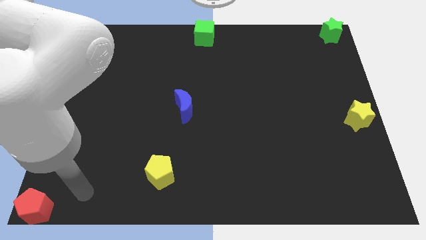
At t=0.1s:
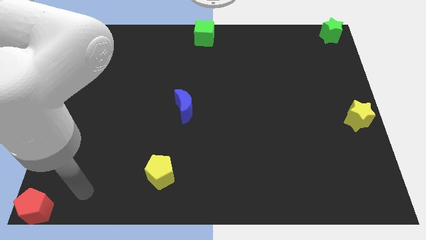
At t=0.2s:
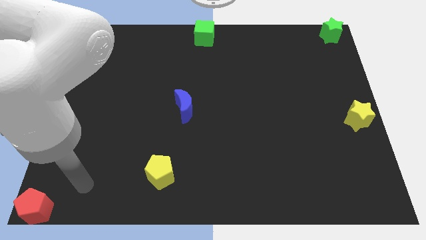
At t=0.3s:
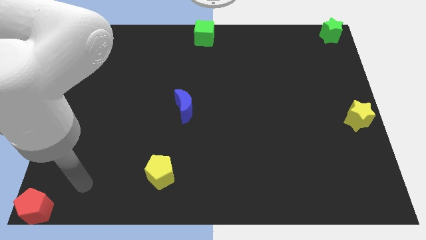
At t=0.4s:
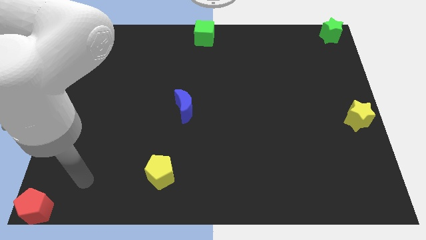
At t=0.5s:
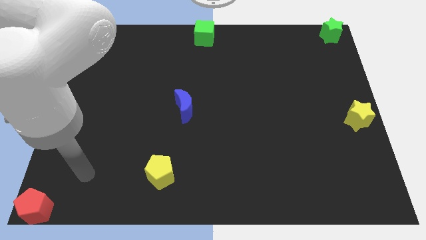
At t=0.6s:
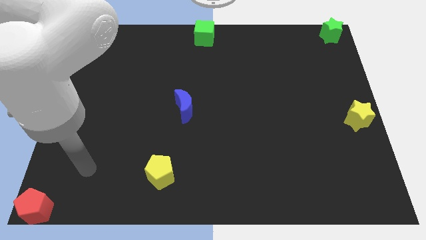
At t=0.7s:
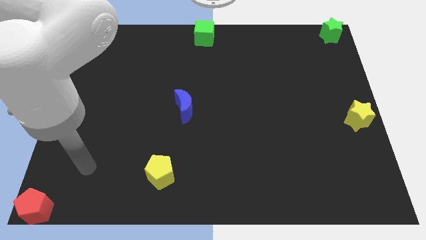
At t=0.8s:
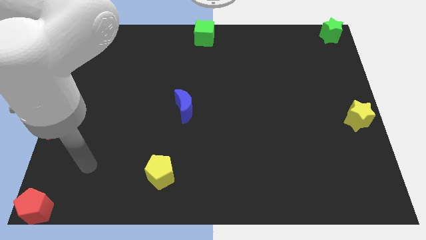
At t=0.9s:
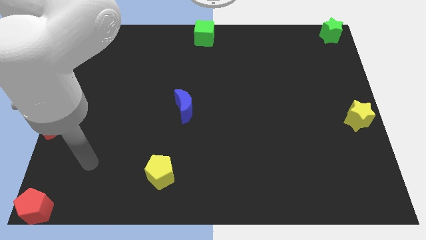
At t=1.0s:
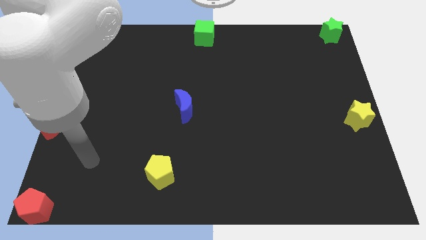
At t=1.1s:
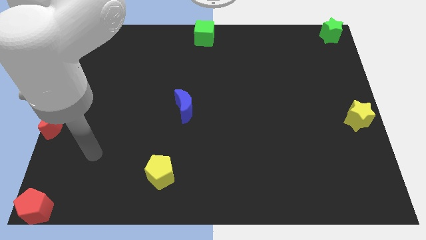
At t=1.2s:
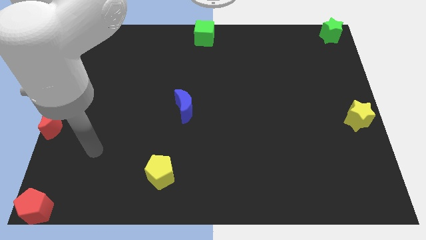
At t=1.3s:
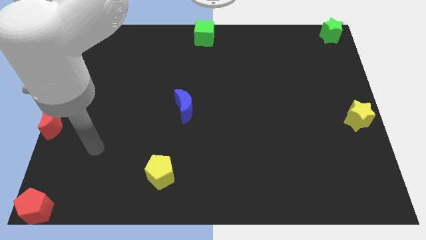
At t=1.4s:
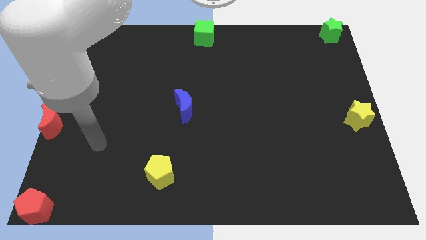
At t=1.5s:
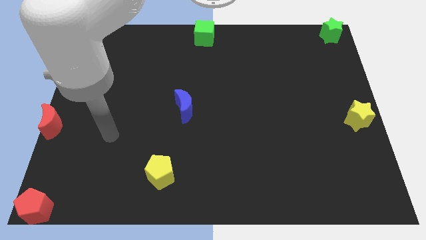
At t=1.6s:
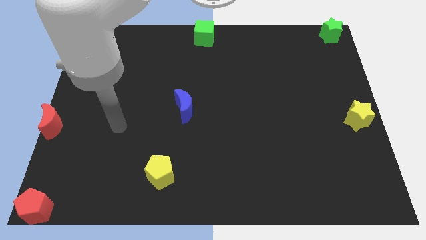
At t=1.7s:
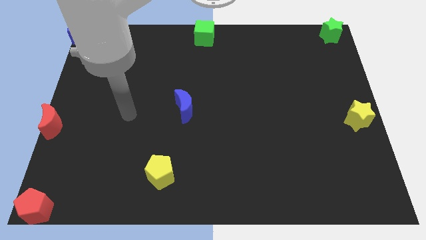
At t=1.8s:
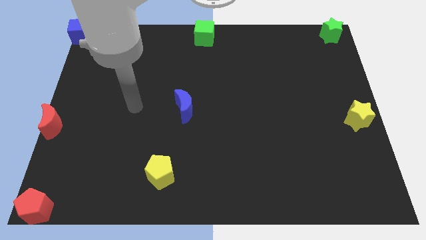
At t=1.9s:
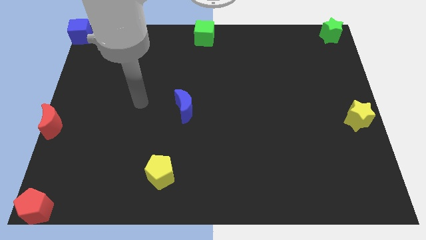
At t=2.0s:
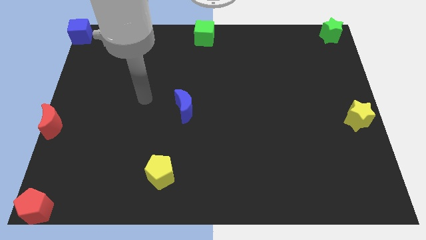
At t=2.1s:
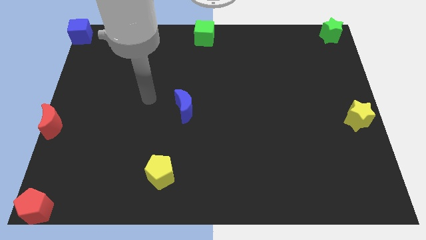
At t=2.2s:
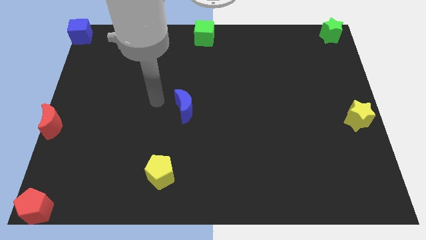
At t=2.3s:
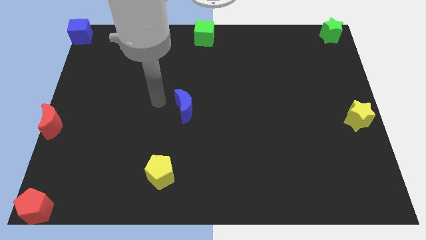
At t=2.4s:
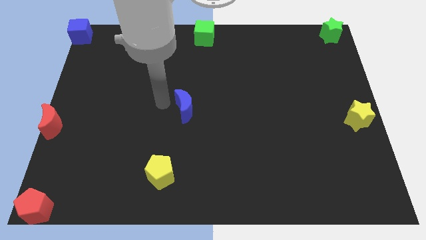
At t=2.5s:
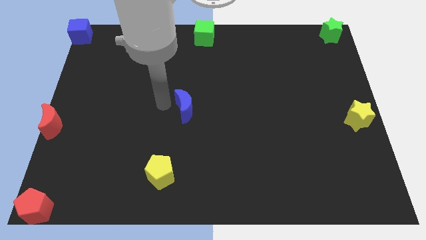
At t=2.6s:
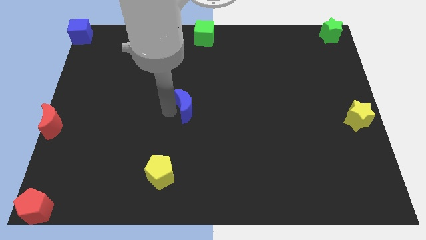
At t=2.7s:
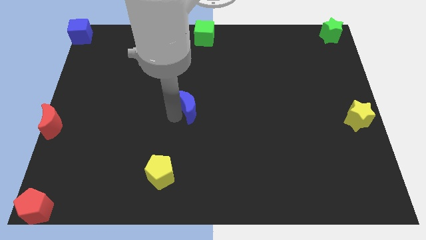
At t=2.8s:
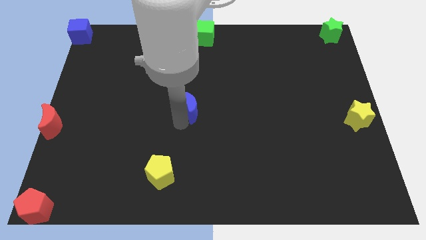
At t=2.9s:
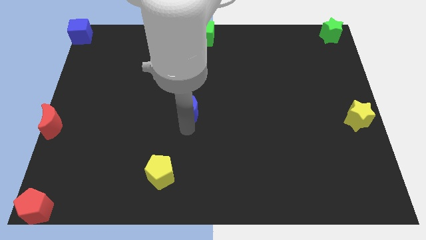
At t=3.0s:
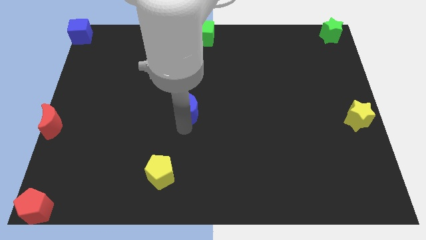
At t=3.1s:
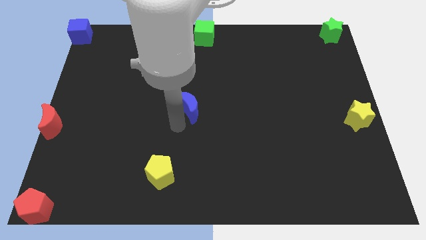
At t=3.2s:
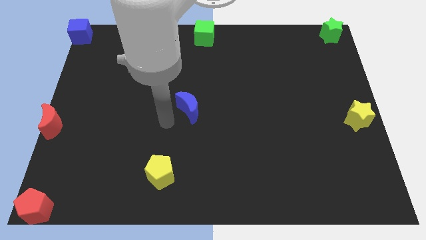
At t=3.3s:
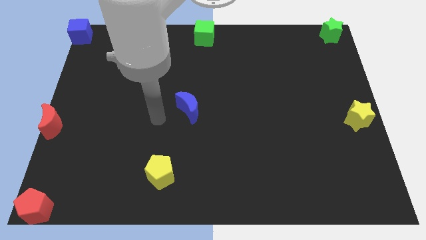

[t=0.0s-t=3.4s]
slightly move the blue crescent to the bottom center of the board

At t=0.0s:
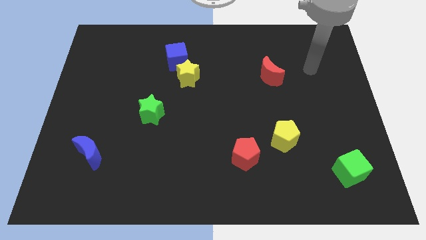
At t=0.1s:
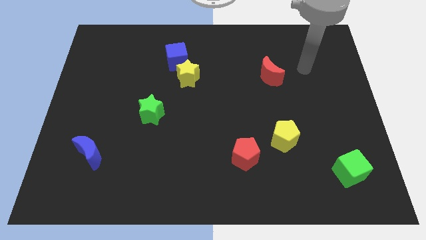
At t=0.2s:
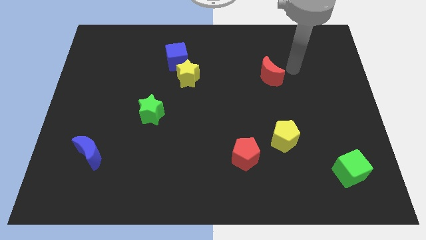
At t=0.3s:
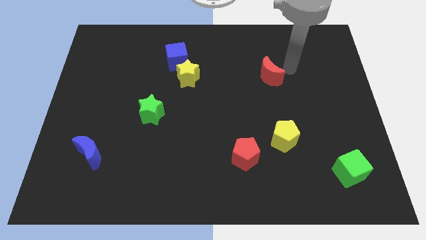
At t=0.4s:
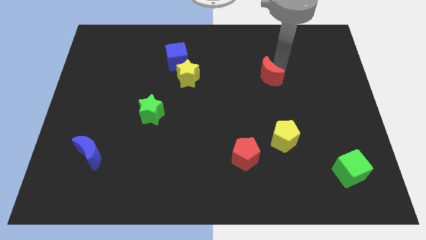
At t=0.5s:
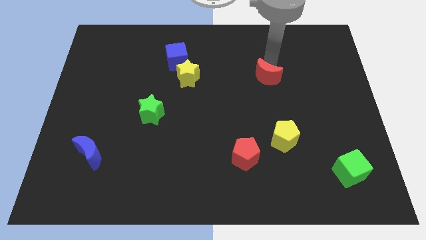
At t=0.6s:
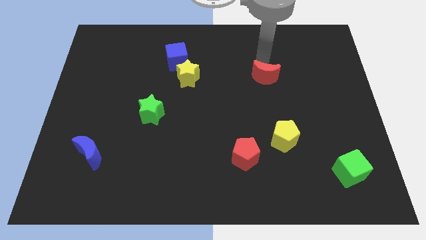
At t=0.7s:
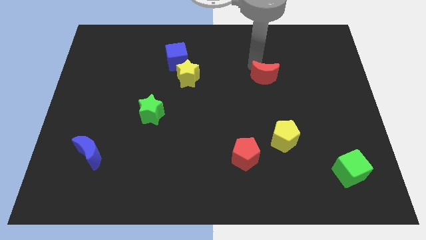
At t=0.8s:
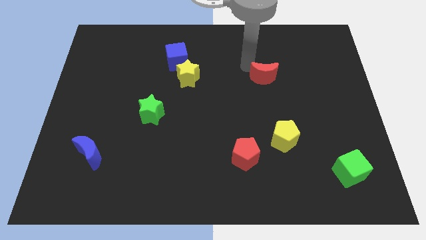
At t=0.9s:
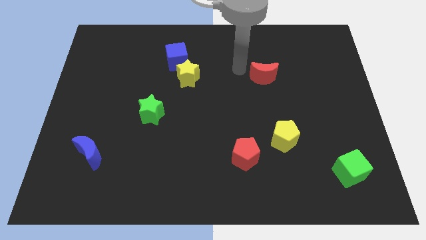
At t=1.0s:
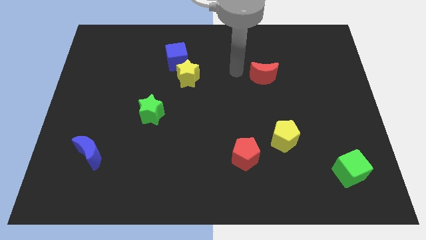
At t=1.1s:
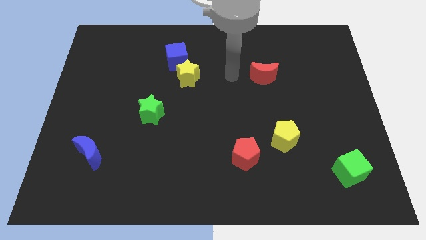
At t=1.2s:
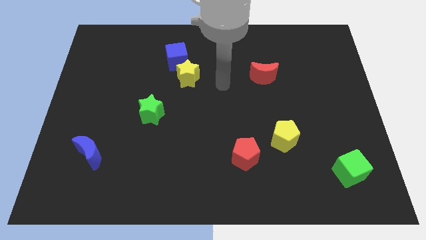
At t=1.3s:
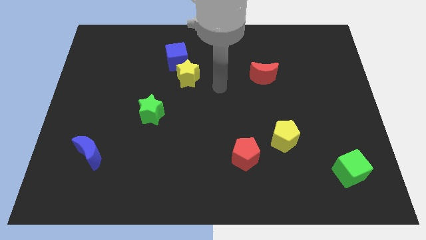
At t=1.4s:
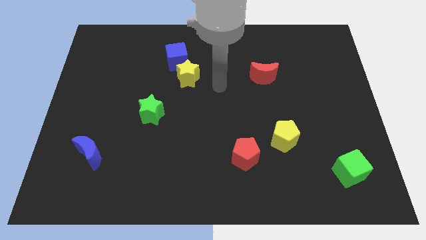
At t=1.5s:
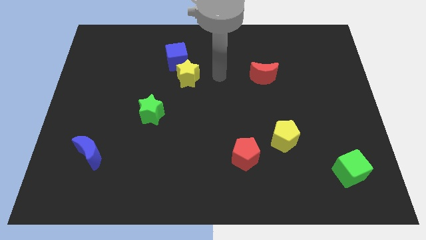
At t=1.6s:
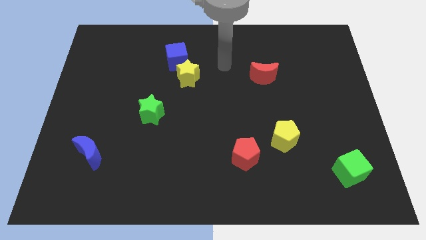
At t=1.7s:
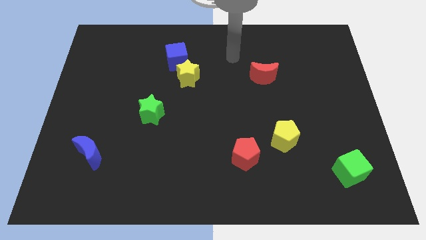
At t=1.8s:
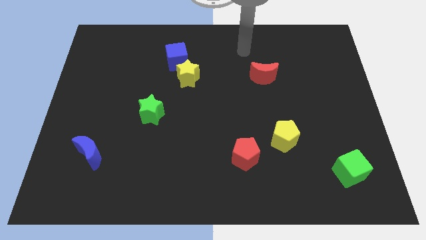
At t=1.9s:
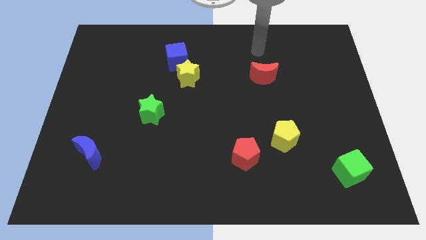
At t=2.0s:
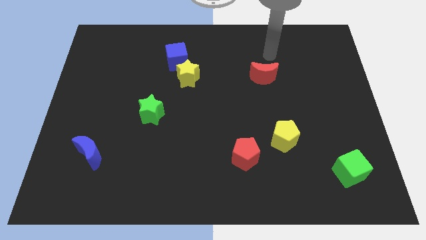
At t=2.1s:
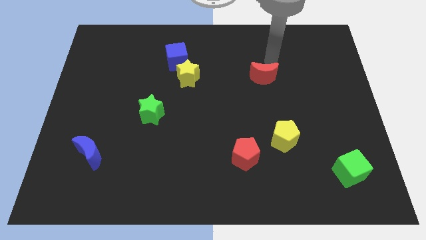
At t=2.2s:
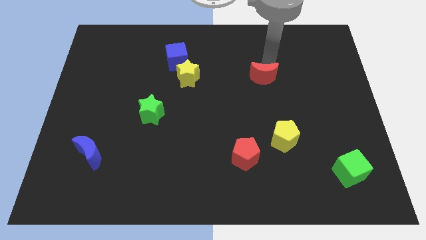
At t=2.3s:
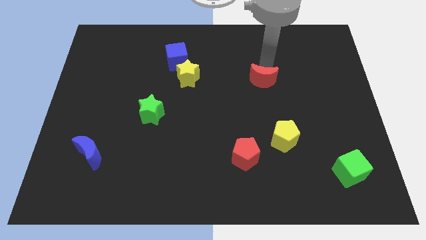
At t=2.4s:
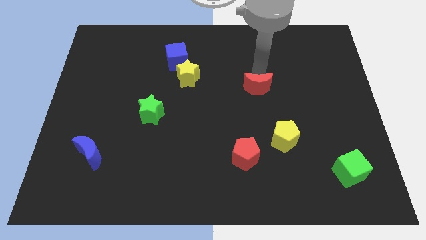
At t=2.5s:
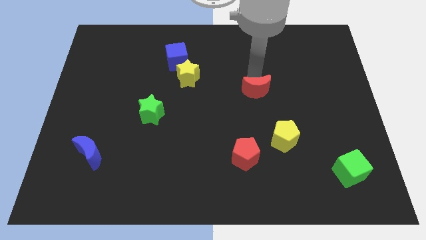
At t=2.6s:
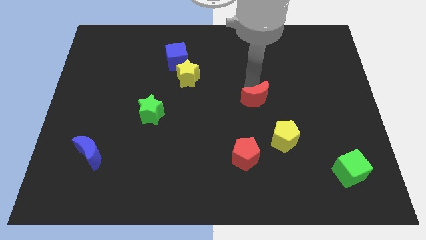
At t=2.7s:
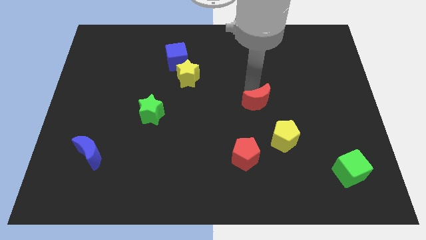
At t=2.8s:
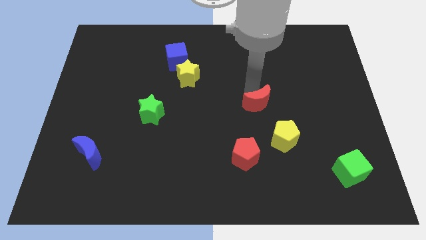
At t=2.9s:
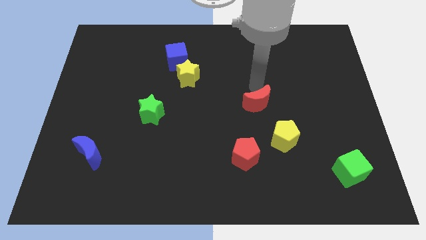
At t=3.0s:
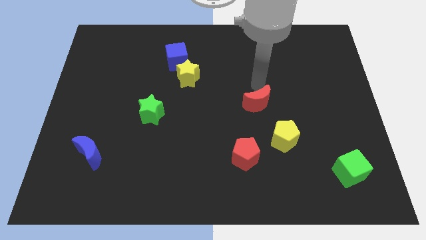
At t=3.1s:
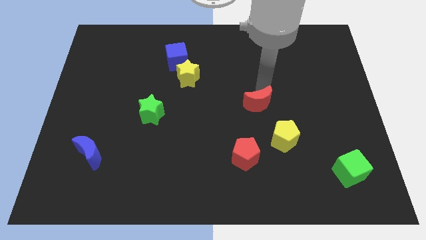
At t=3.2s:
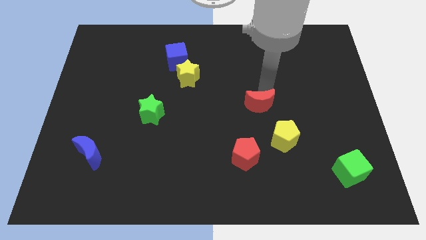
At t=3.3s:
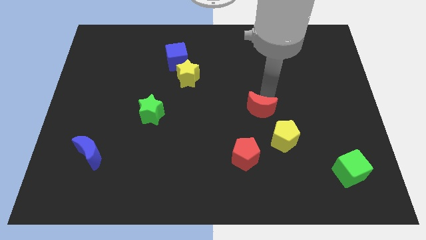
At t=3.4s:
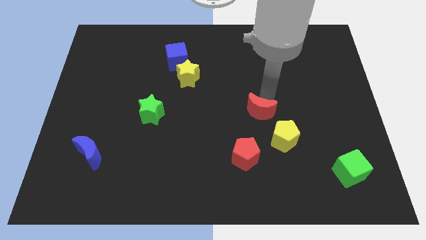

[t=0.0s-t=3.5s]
slide the red moon towards the red pentagon

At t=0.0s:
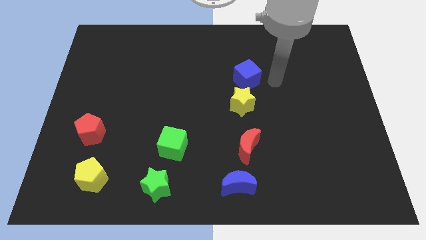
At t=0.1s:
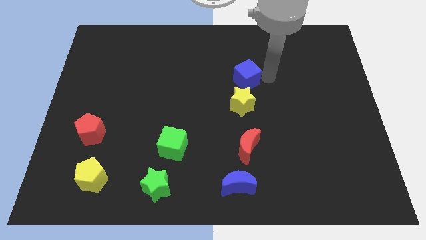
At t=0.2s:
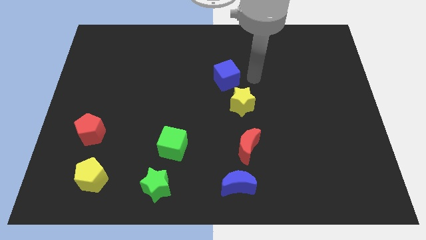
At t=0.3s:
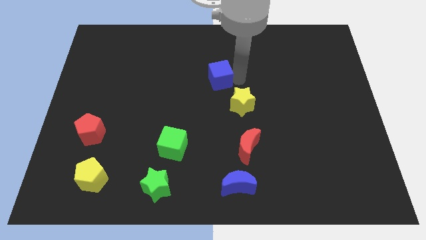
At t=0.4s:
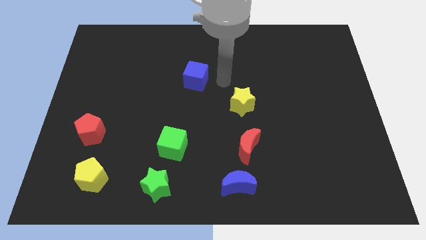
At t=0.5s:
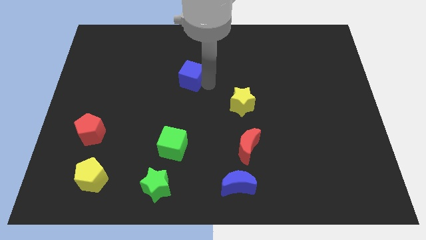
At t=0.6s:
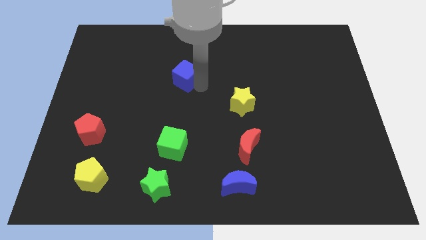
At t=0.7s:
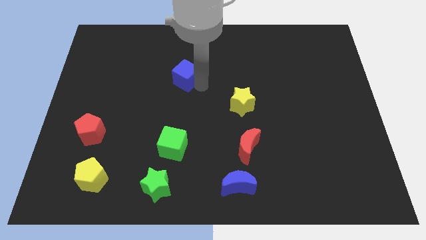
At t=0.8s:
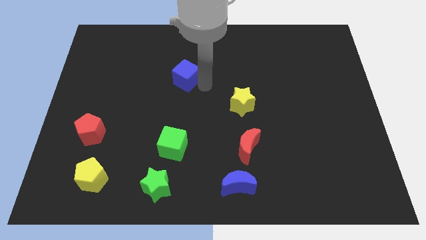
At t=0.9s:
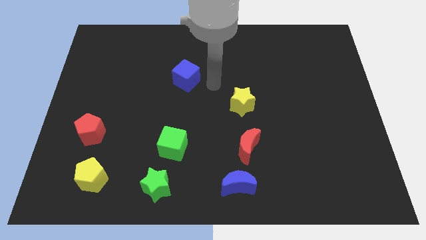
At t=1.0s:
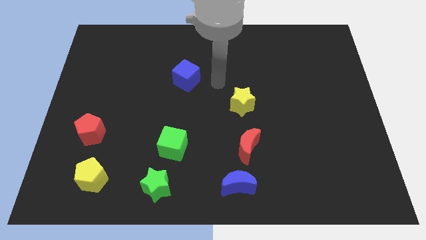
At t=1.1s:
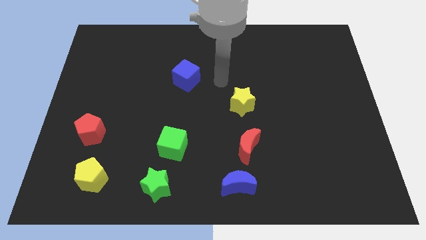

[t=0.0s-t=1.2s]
move the blue cube towards the top left of the board

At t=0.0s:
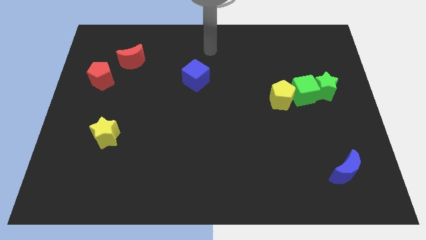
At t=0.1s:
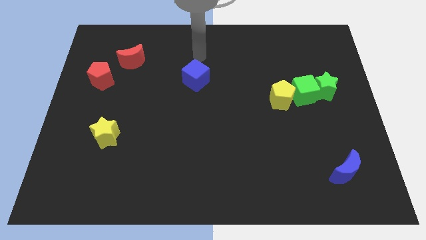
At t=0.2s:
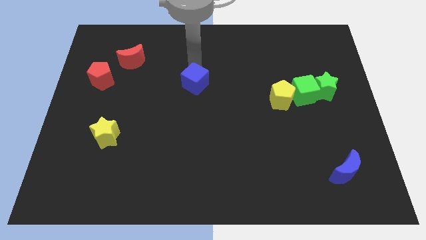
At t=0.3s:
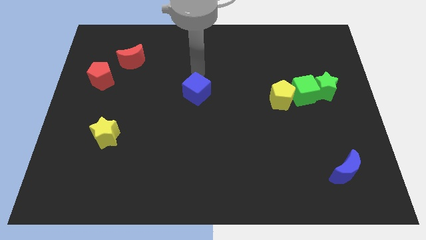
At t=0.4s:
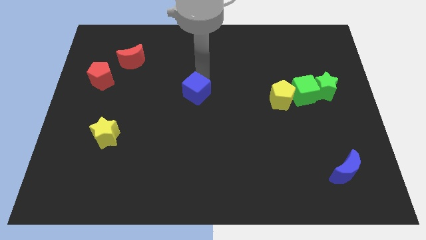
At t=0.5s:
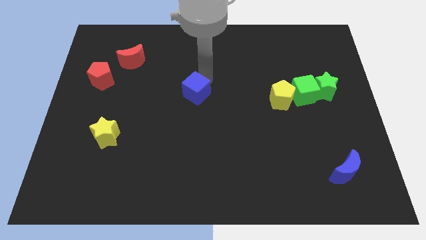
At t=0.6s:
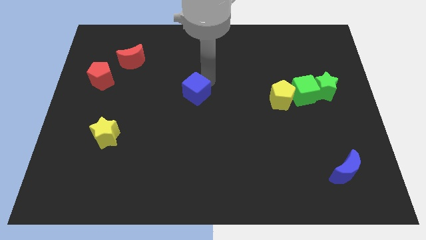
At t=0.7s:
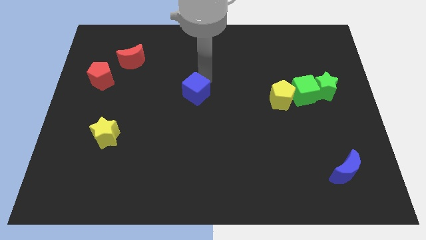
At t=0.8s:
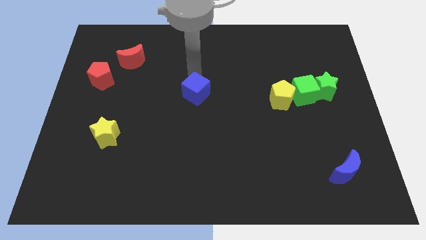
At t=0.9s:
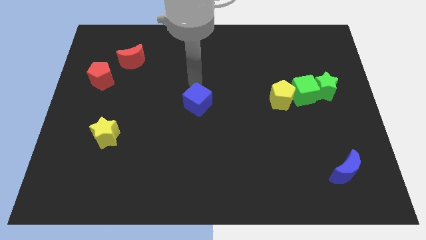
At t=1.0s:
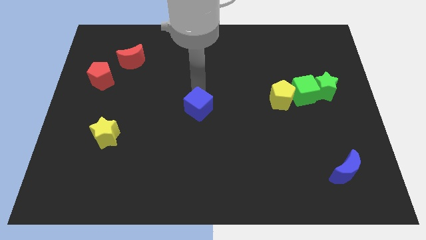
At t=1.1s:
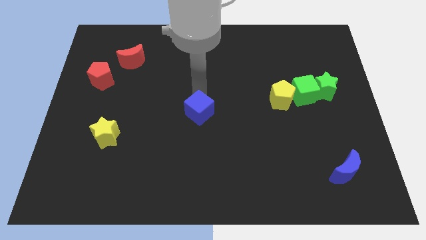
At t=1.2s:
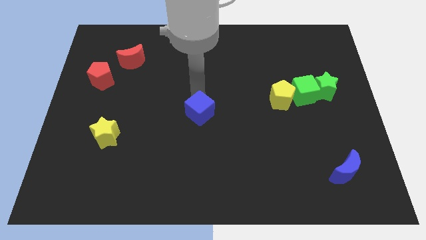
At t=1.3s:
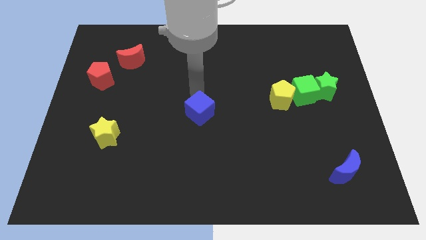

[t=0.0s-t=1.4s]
push the blue cube downward
